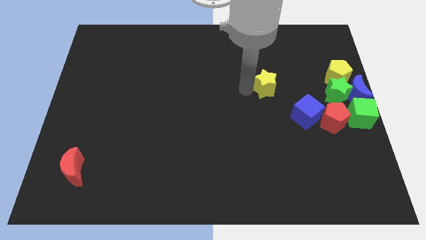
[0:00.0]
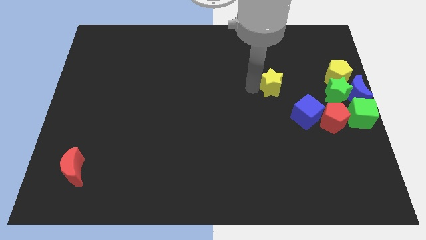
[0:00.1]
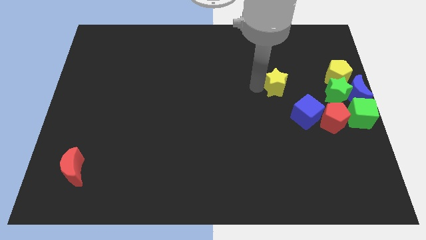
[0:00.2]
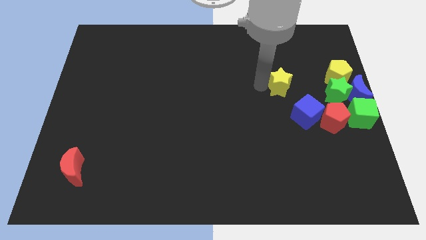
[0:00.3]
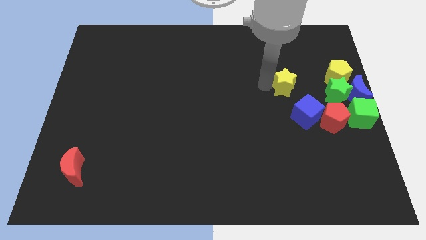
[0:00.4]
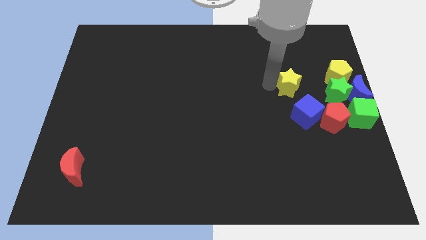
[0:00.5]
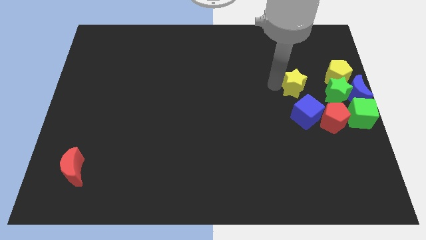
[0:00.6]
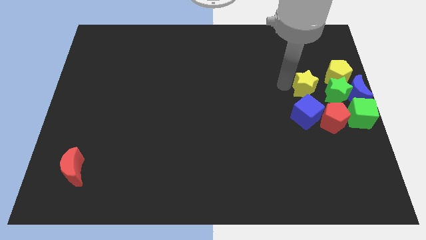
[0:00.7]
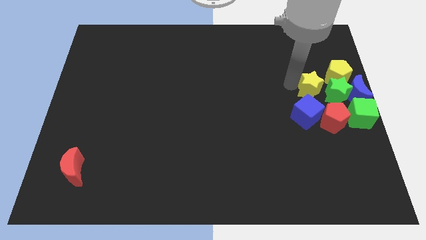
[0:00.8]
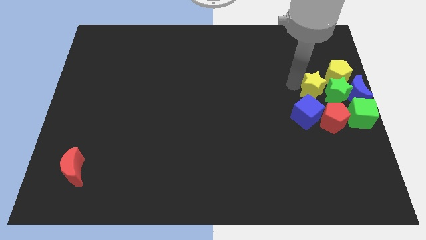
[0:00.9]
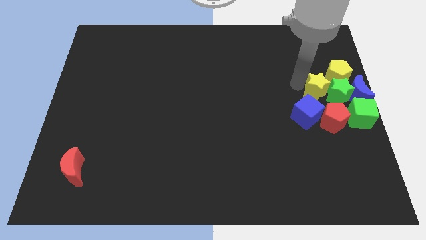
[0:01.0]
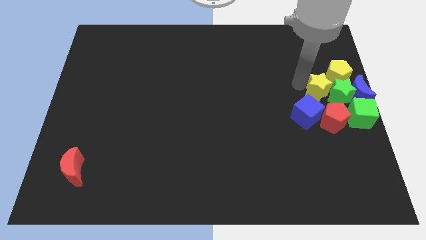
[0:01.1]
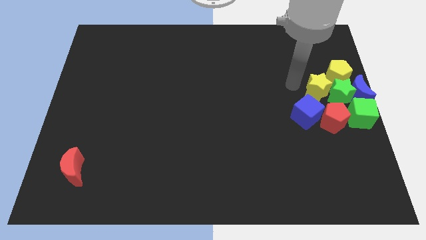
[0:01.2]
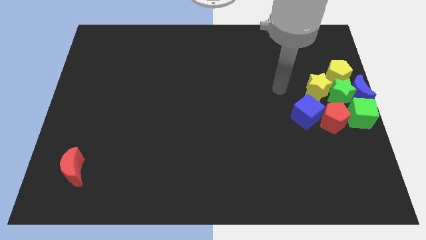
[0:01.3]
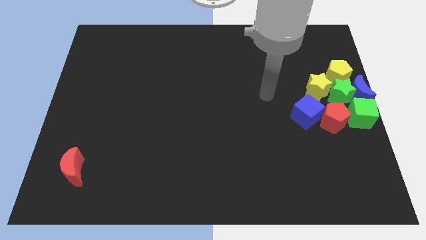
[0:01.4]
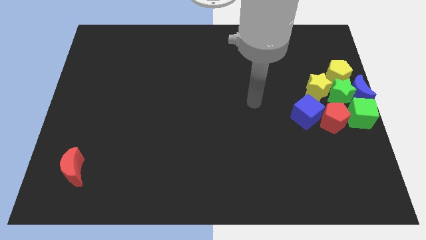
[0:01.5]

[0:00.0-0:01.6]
push the yellow star into green star

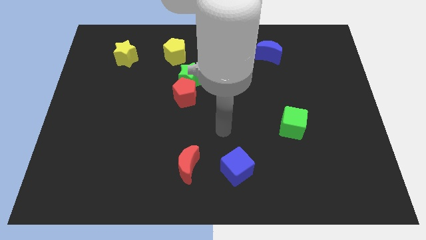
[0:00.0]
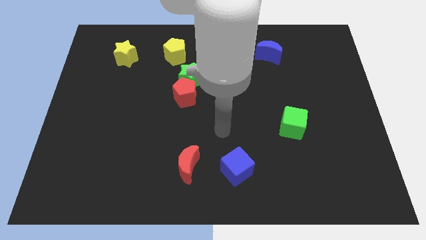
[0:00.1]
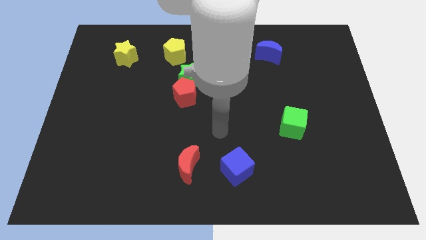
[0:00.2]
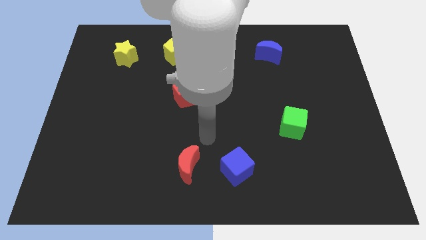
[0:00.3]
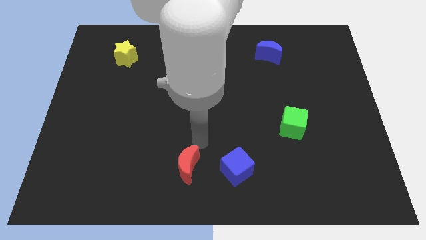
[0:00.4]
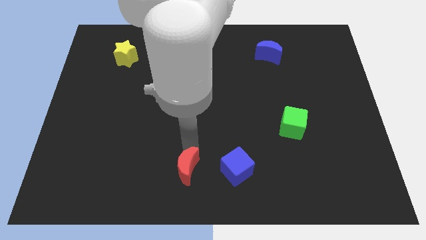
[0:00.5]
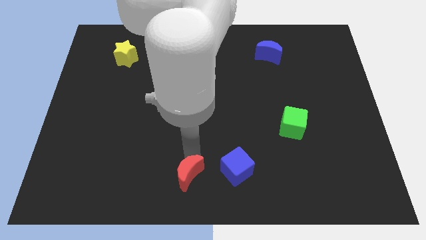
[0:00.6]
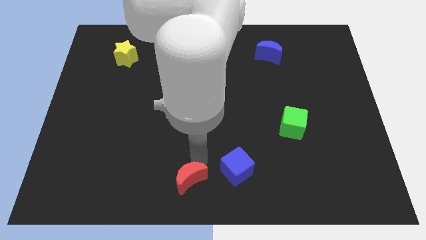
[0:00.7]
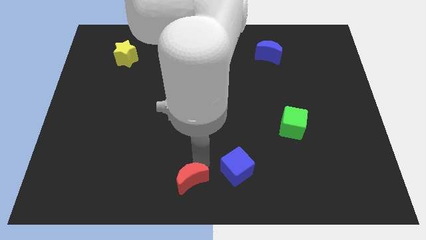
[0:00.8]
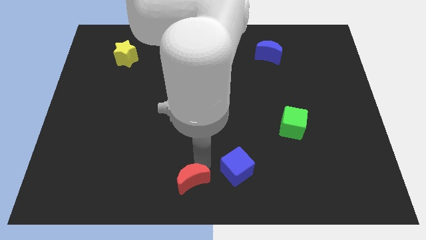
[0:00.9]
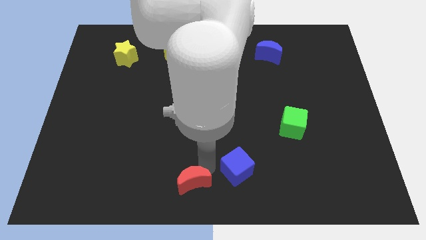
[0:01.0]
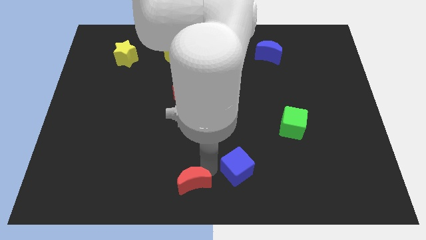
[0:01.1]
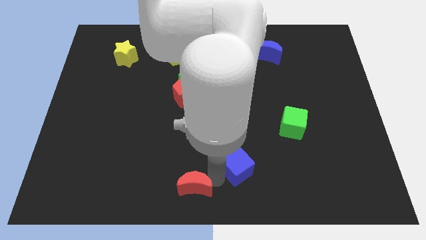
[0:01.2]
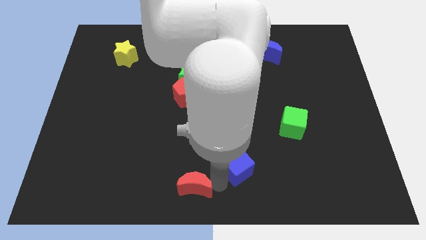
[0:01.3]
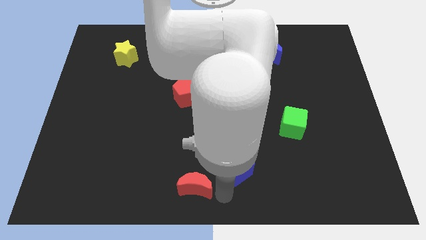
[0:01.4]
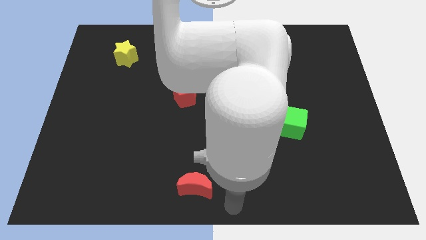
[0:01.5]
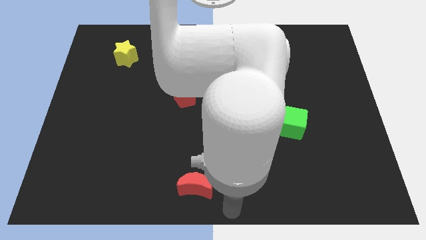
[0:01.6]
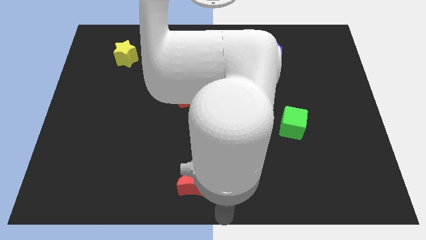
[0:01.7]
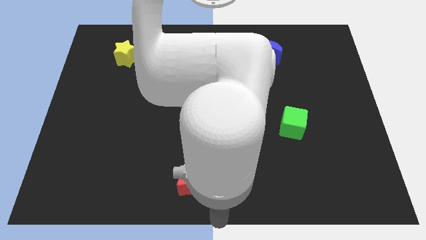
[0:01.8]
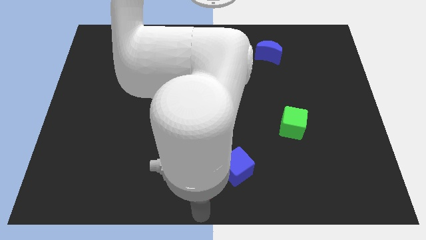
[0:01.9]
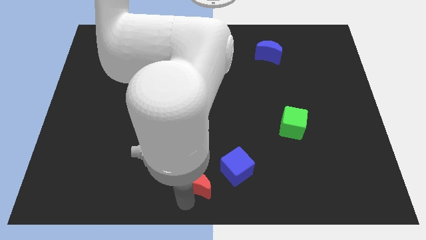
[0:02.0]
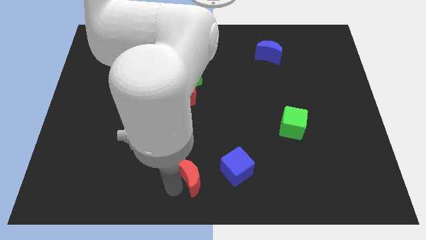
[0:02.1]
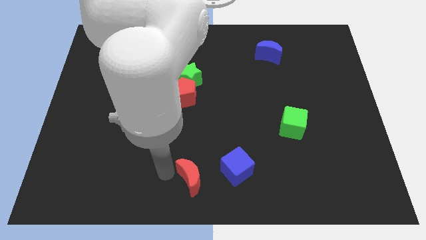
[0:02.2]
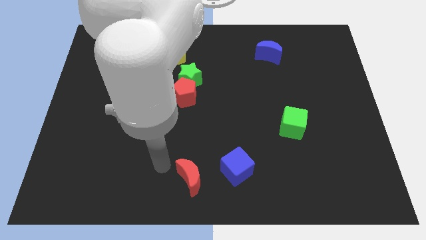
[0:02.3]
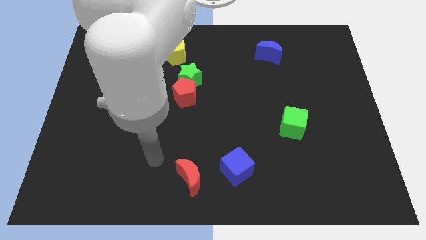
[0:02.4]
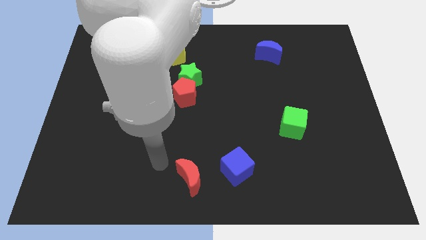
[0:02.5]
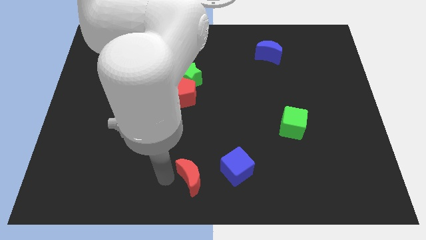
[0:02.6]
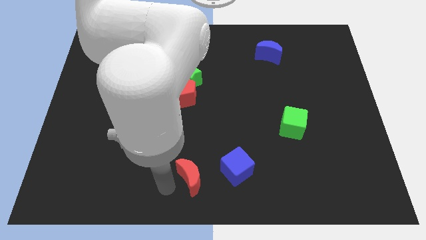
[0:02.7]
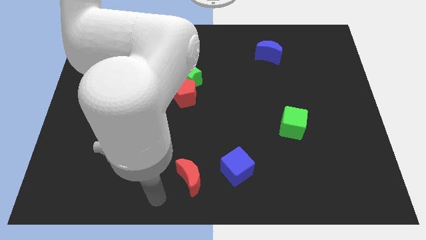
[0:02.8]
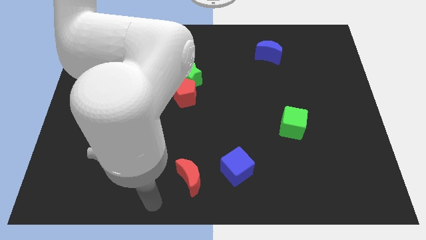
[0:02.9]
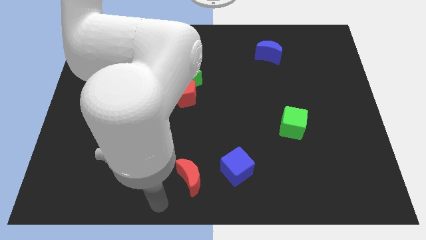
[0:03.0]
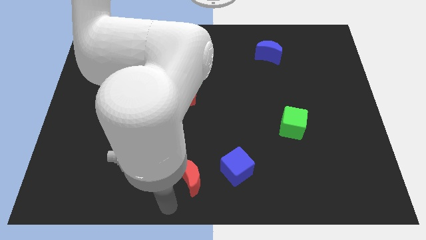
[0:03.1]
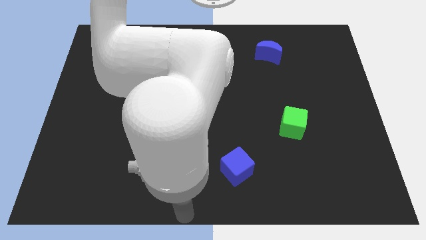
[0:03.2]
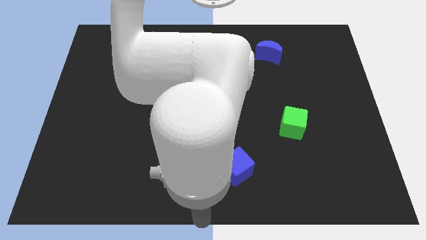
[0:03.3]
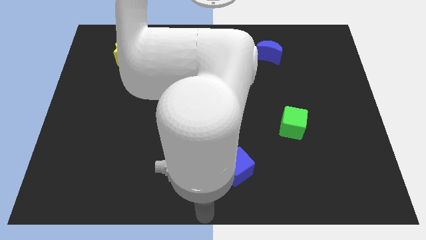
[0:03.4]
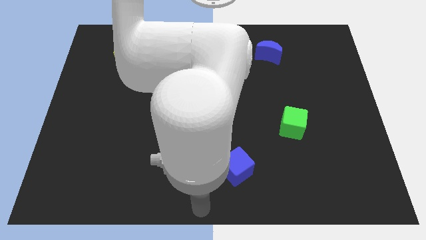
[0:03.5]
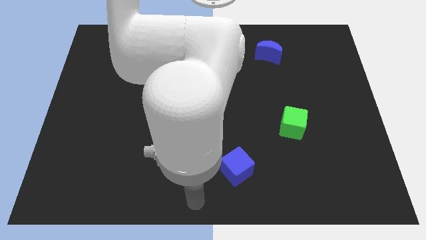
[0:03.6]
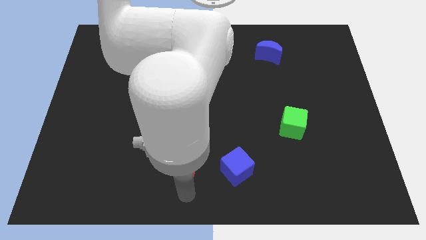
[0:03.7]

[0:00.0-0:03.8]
push the red moon in to the bottom center

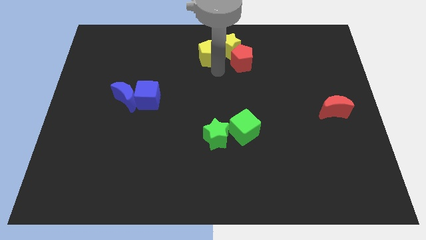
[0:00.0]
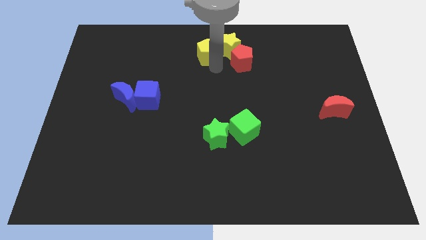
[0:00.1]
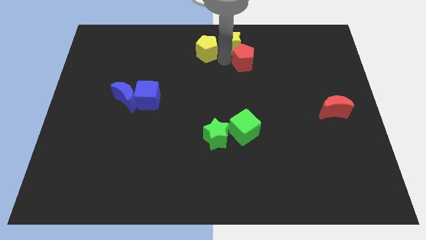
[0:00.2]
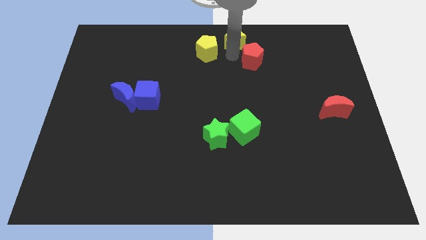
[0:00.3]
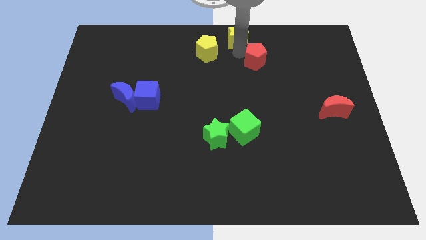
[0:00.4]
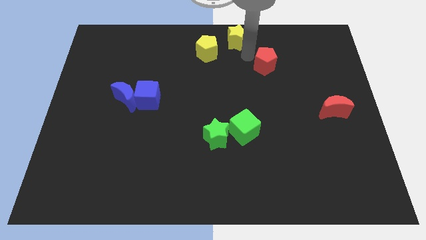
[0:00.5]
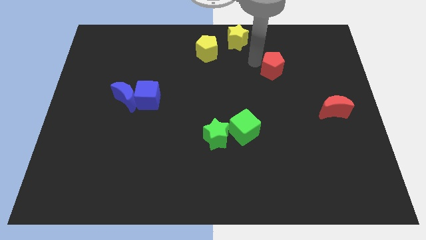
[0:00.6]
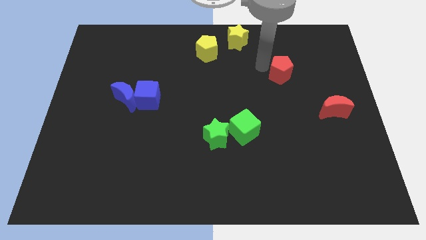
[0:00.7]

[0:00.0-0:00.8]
move the red pentagon towards the red crescent

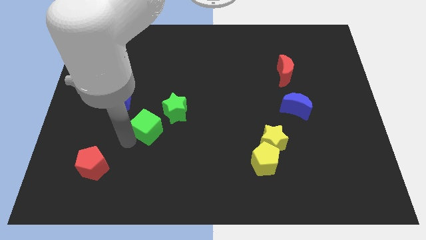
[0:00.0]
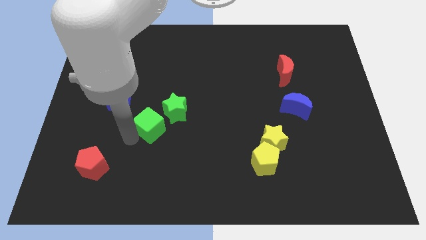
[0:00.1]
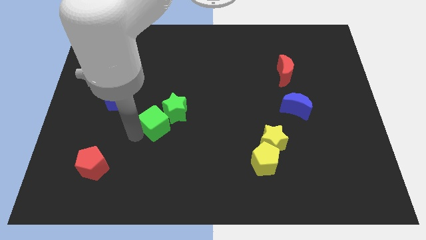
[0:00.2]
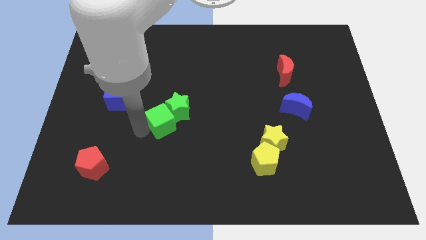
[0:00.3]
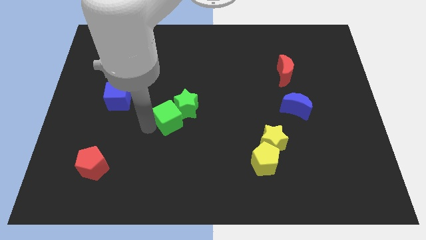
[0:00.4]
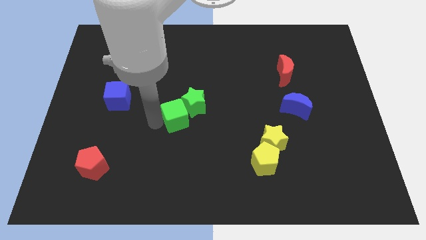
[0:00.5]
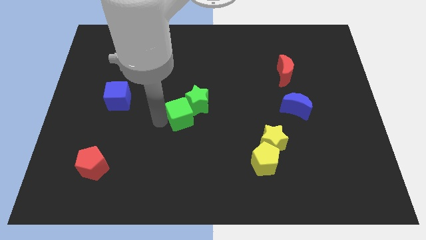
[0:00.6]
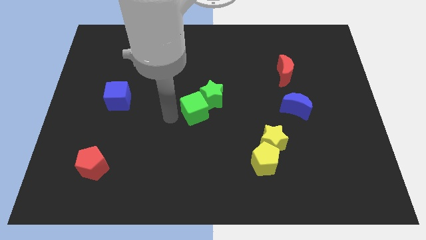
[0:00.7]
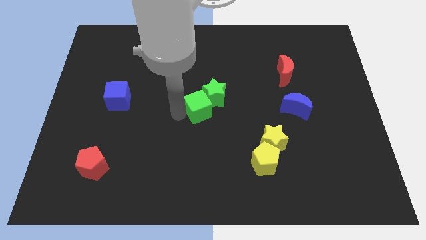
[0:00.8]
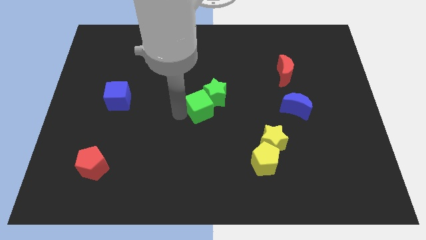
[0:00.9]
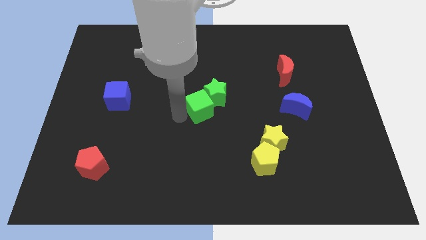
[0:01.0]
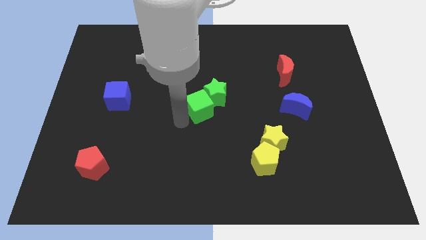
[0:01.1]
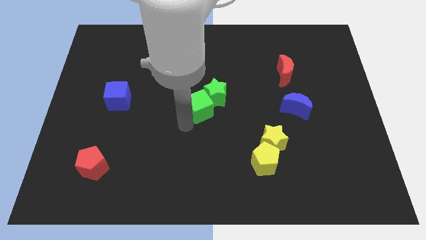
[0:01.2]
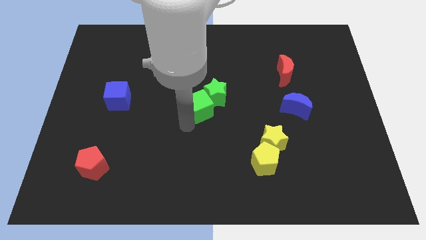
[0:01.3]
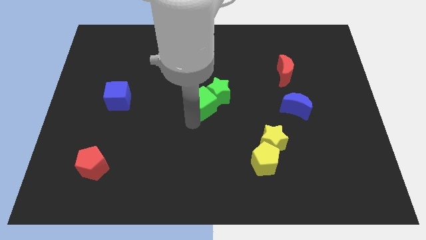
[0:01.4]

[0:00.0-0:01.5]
slide the green blocks to the center of the board

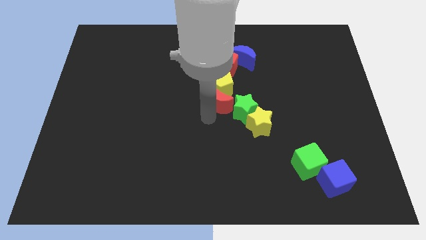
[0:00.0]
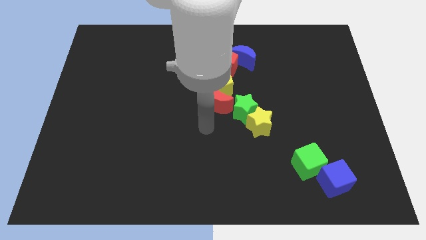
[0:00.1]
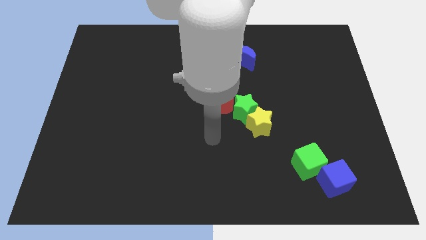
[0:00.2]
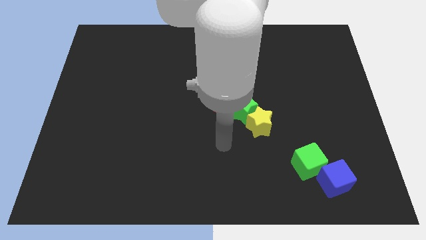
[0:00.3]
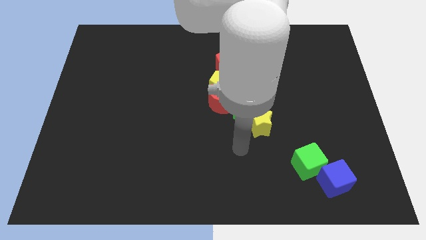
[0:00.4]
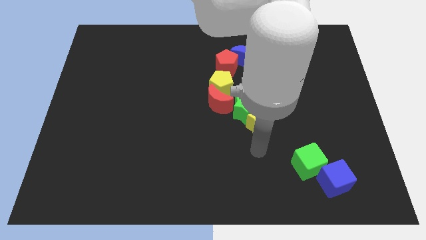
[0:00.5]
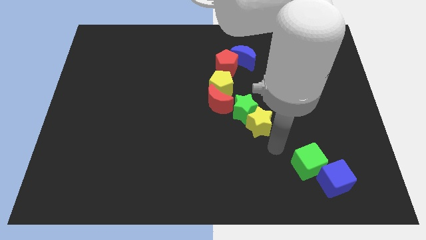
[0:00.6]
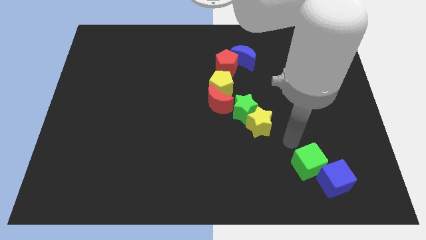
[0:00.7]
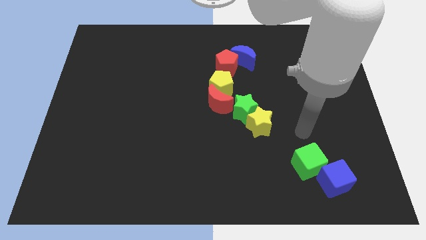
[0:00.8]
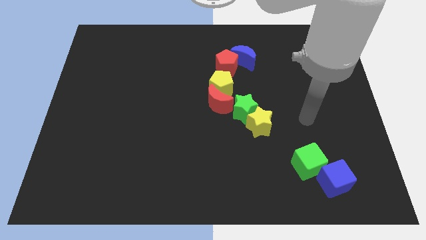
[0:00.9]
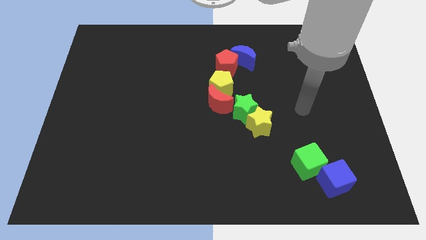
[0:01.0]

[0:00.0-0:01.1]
move your arm away from red crescent

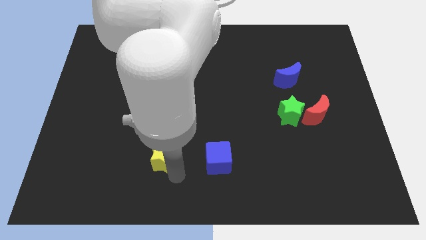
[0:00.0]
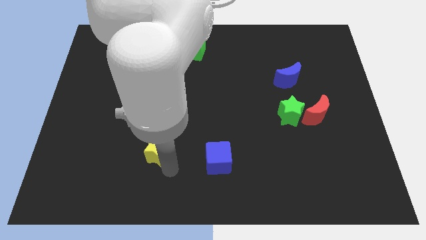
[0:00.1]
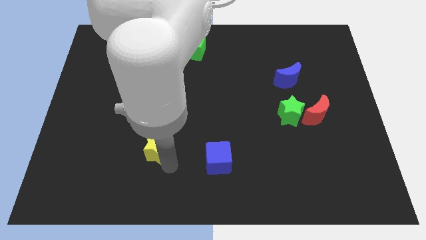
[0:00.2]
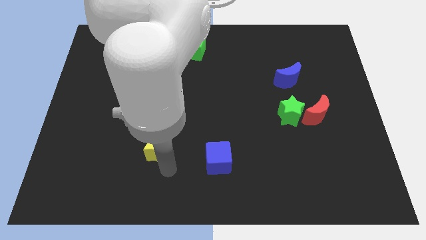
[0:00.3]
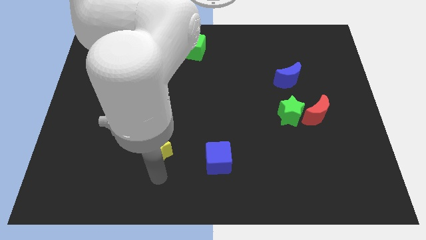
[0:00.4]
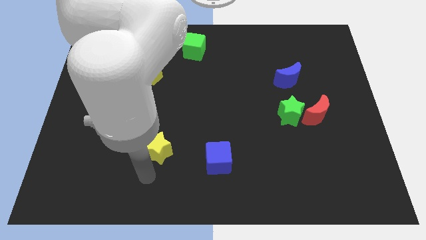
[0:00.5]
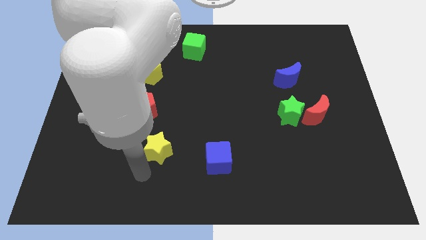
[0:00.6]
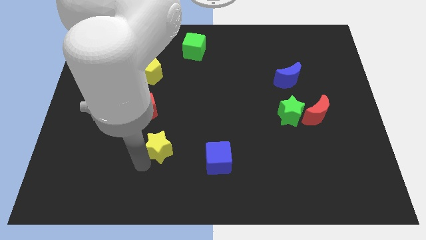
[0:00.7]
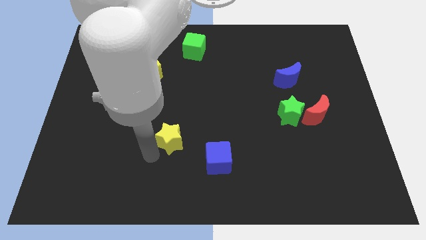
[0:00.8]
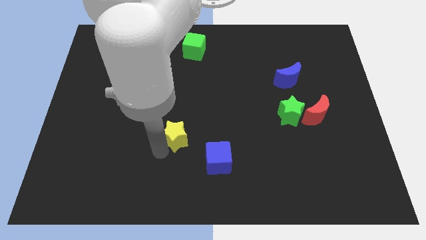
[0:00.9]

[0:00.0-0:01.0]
drag the yellow star in between blue cube and the red pentagon
